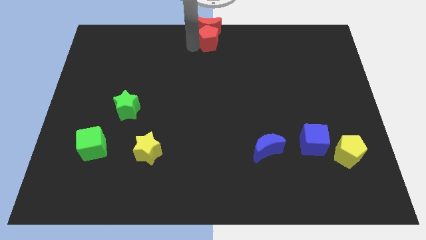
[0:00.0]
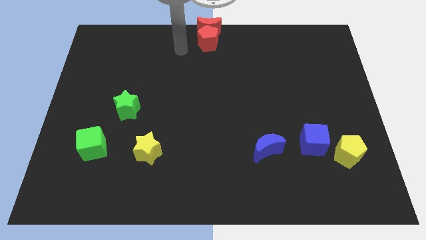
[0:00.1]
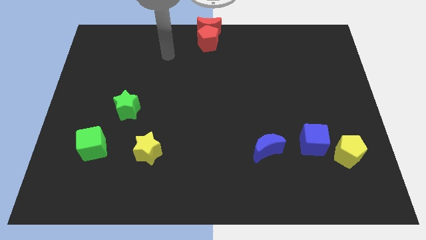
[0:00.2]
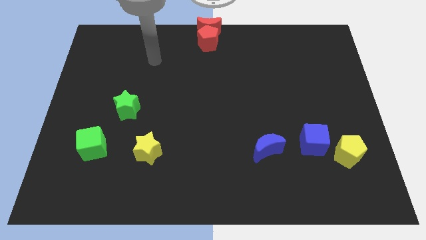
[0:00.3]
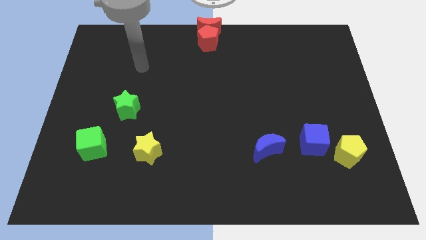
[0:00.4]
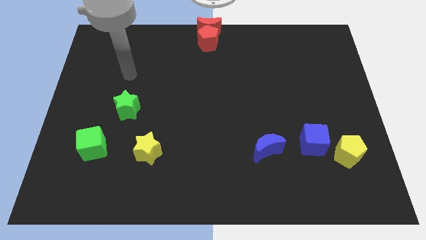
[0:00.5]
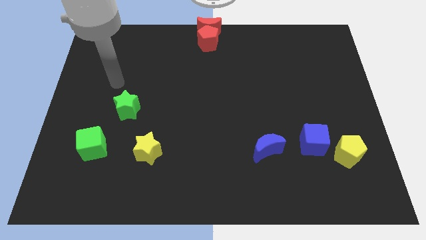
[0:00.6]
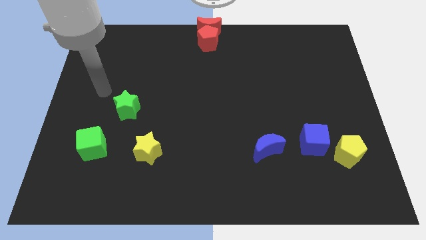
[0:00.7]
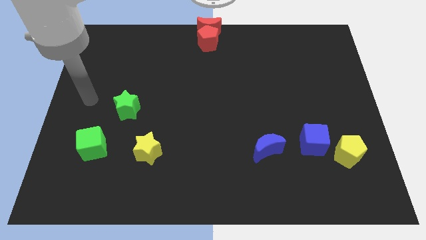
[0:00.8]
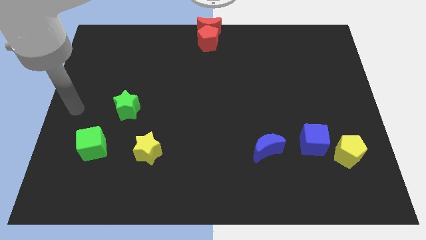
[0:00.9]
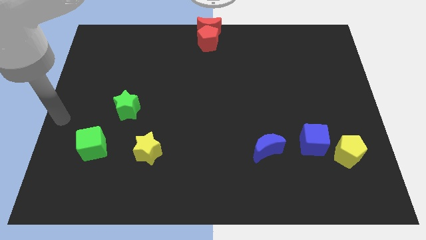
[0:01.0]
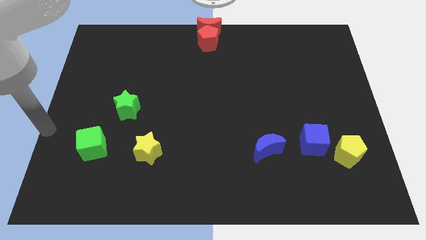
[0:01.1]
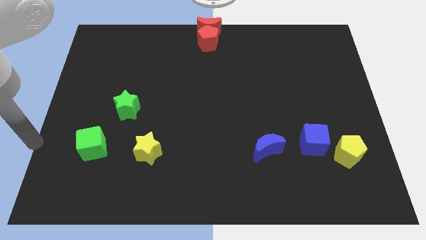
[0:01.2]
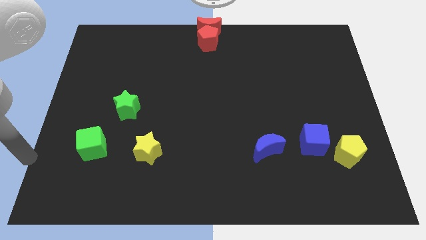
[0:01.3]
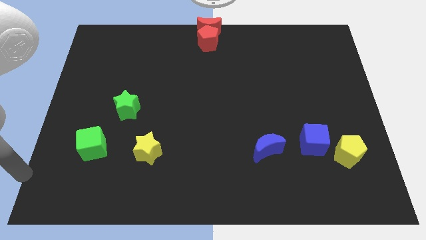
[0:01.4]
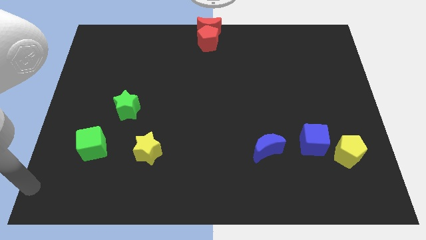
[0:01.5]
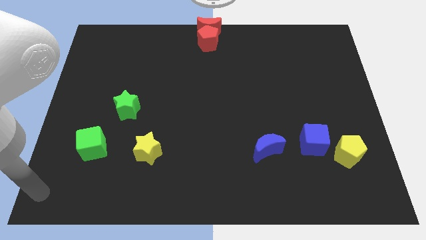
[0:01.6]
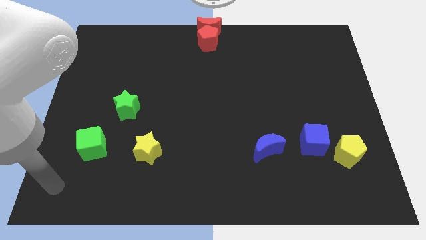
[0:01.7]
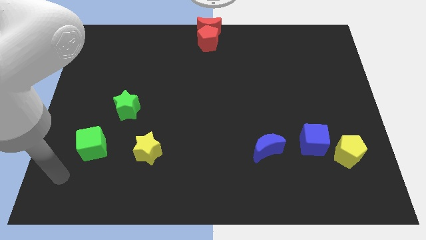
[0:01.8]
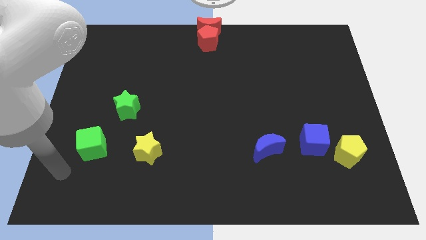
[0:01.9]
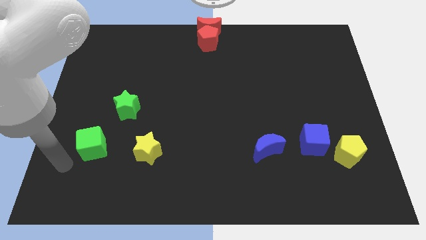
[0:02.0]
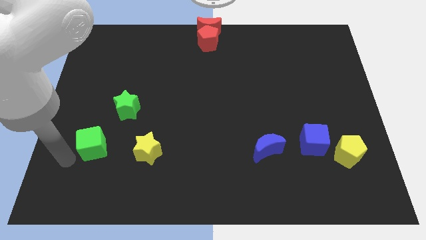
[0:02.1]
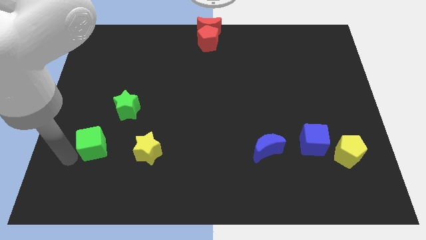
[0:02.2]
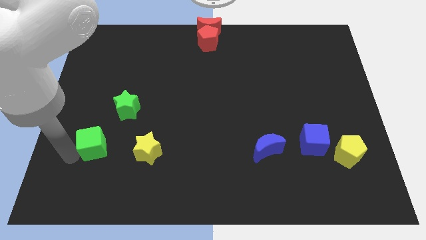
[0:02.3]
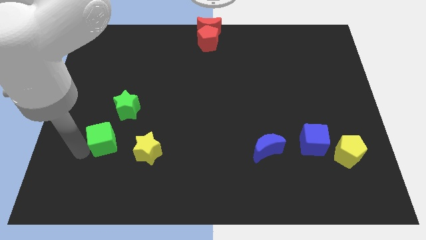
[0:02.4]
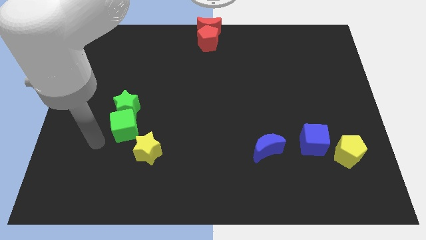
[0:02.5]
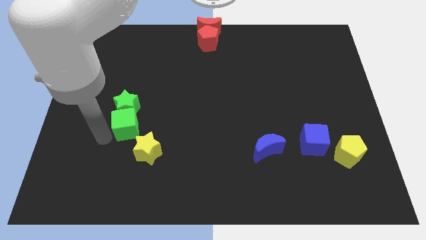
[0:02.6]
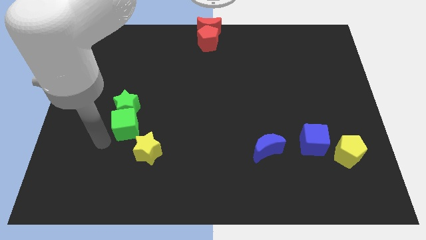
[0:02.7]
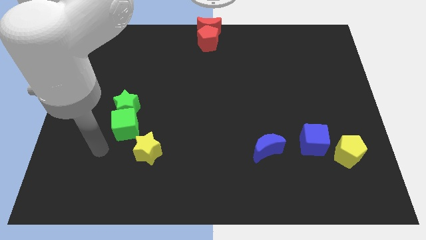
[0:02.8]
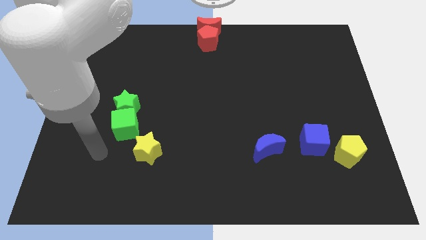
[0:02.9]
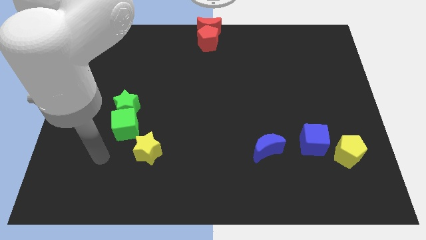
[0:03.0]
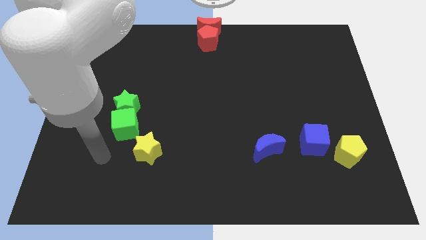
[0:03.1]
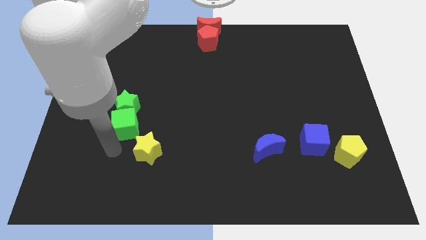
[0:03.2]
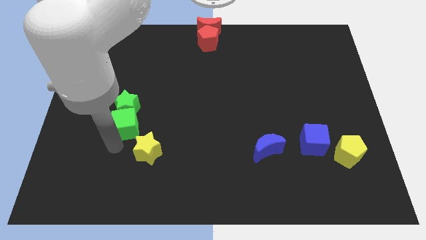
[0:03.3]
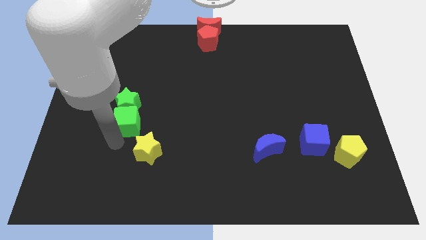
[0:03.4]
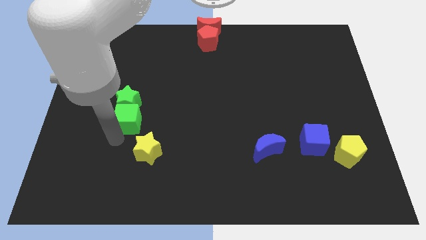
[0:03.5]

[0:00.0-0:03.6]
slide the green cube into the bottom side of the green star

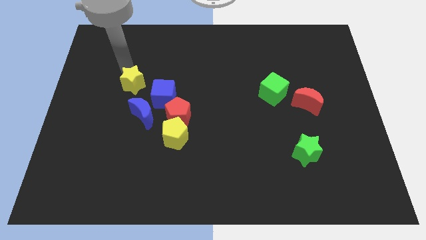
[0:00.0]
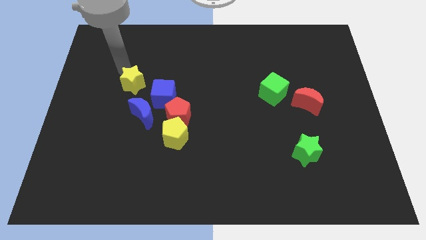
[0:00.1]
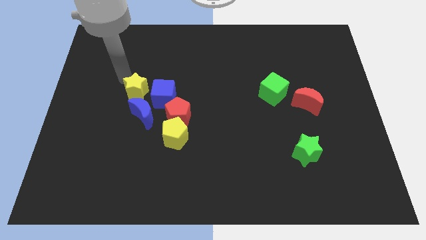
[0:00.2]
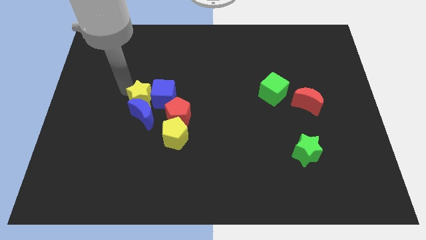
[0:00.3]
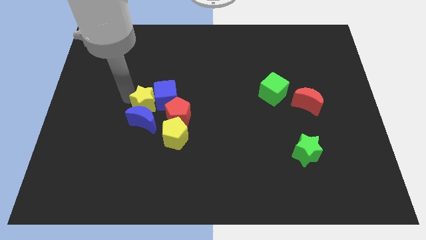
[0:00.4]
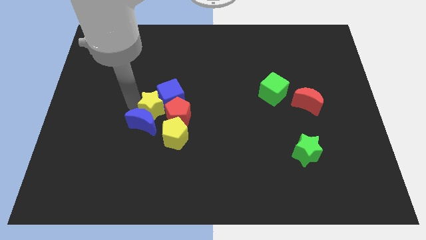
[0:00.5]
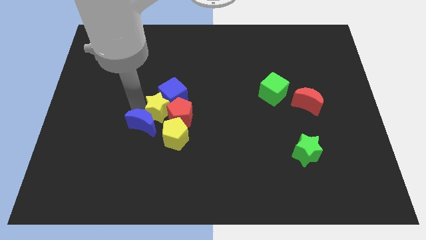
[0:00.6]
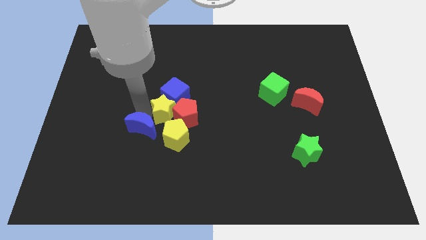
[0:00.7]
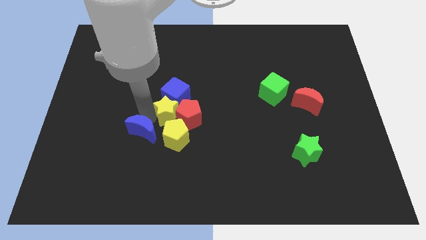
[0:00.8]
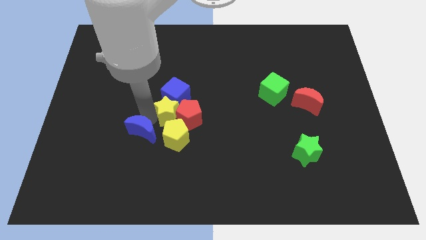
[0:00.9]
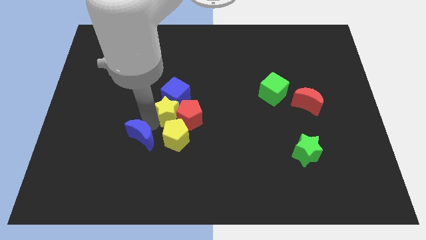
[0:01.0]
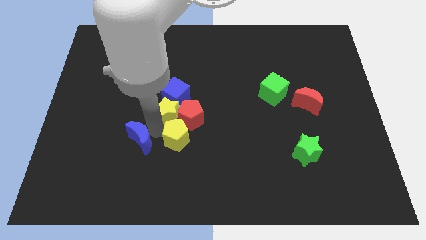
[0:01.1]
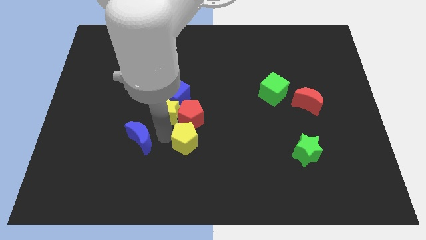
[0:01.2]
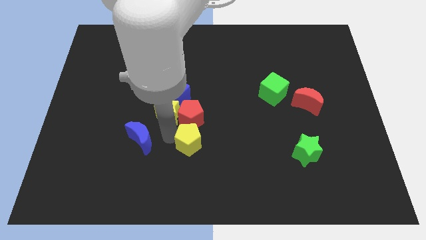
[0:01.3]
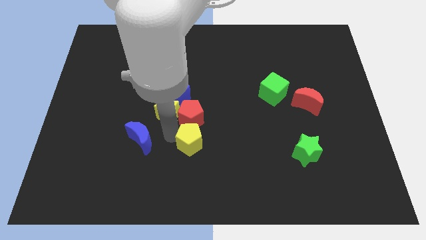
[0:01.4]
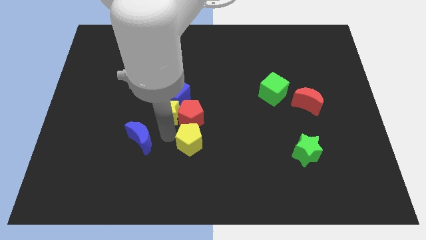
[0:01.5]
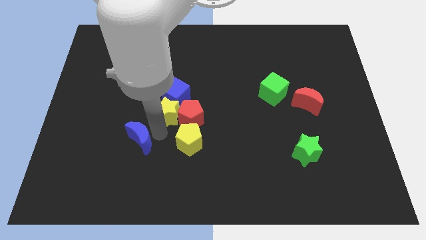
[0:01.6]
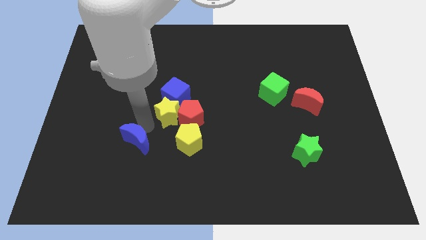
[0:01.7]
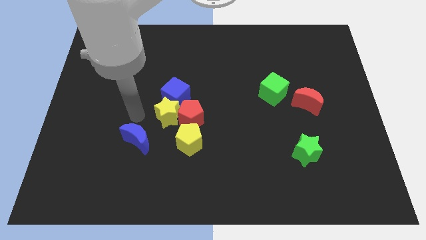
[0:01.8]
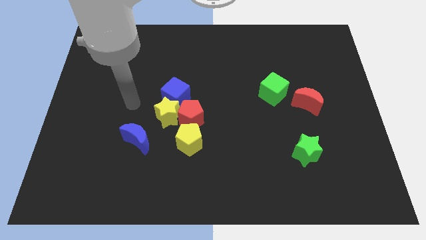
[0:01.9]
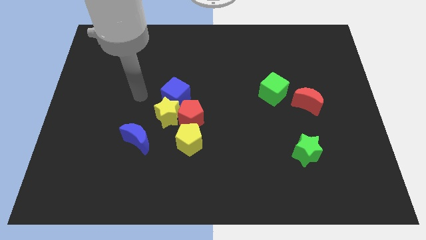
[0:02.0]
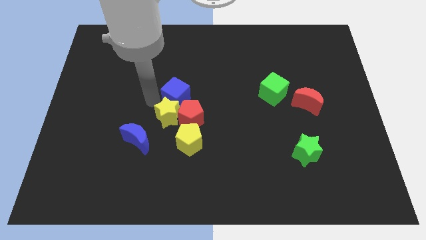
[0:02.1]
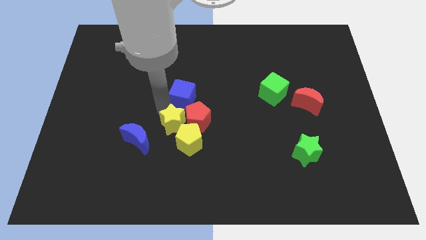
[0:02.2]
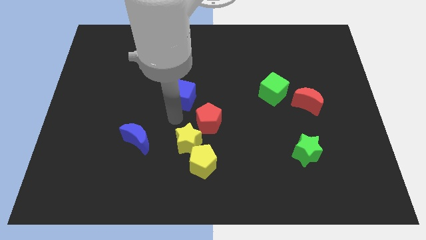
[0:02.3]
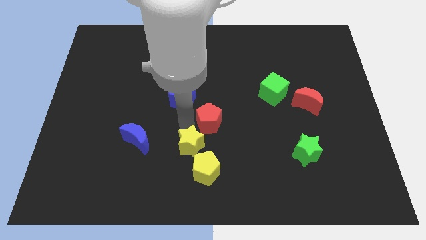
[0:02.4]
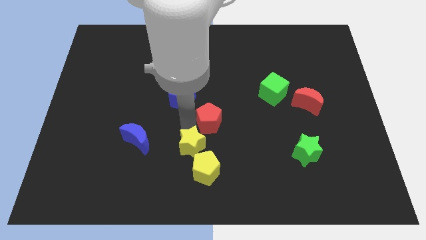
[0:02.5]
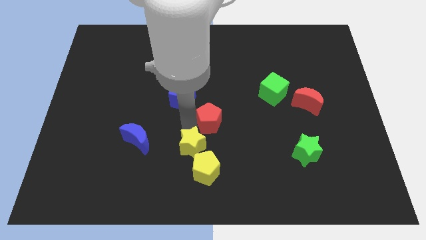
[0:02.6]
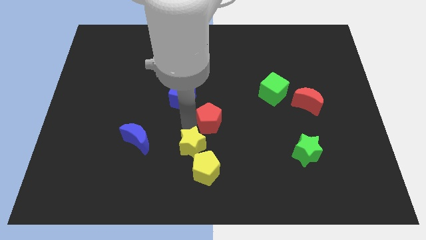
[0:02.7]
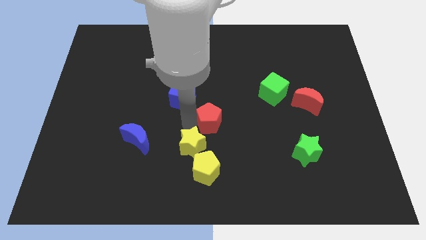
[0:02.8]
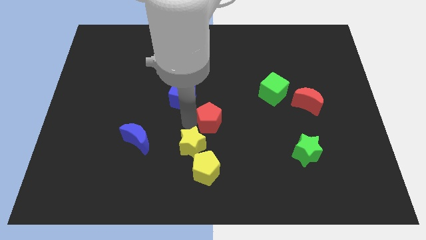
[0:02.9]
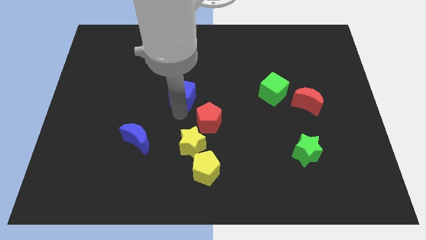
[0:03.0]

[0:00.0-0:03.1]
push the yellow star into the yellow pentagon

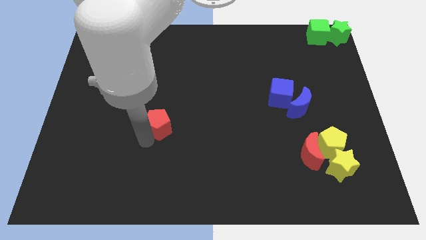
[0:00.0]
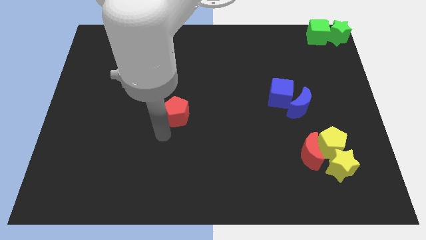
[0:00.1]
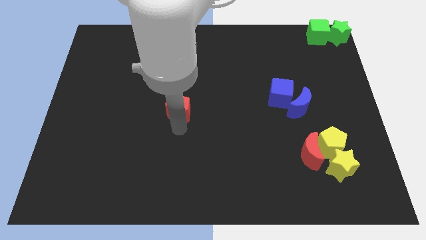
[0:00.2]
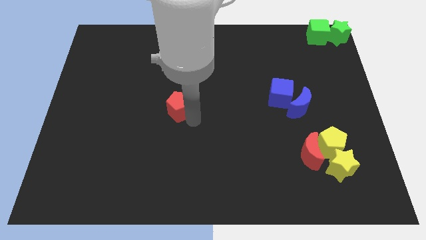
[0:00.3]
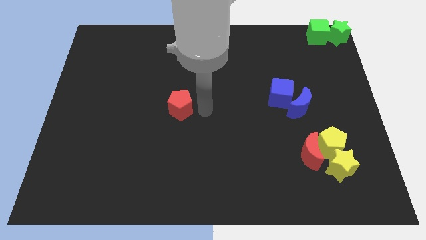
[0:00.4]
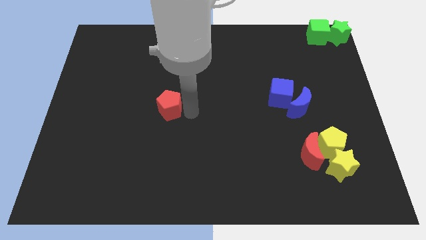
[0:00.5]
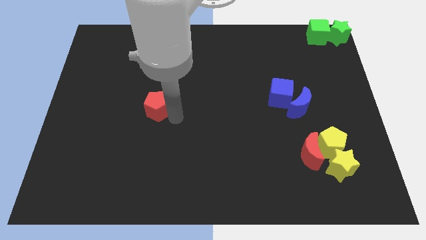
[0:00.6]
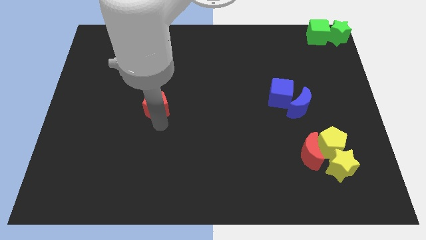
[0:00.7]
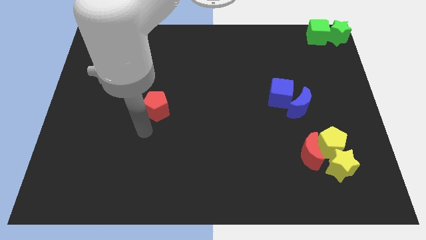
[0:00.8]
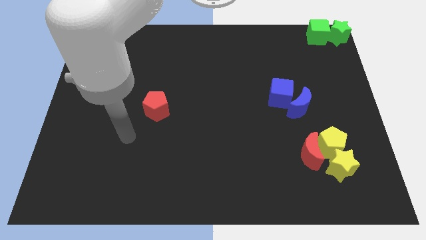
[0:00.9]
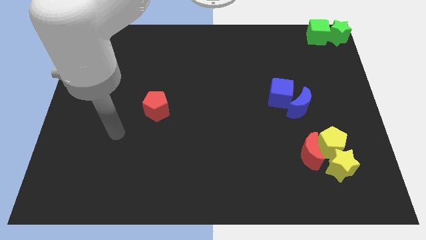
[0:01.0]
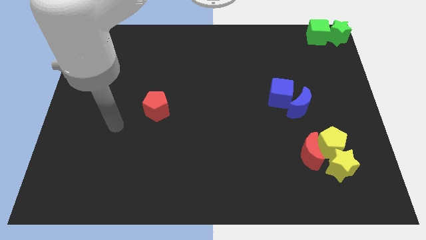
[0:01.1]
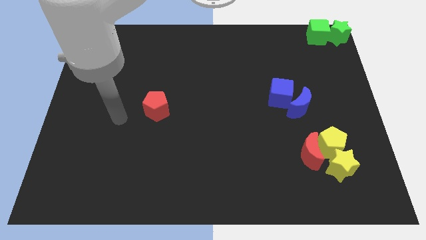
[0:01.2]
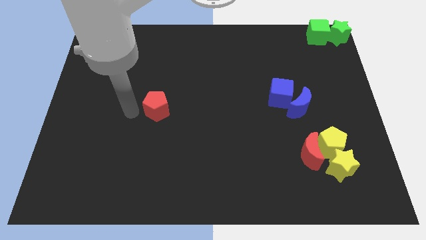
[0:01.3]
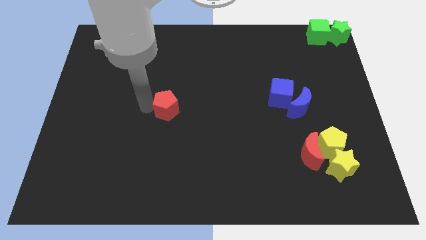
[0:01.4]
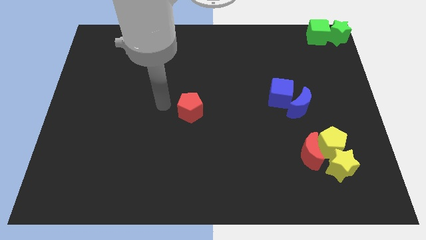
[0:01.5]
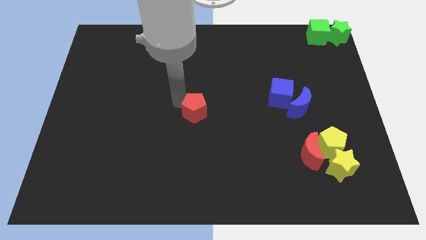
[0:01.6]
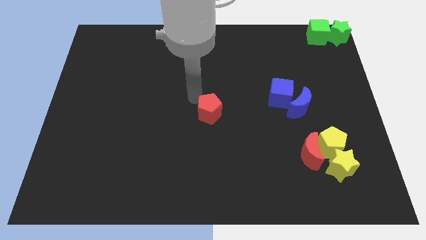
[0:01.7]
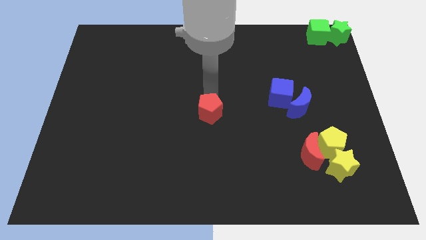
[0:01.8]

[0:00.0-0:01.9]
move the red pentagon to the right

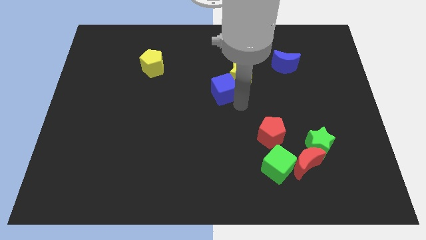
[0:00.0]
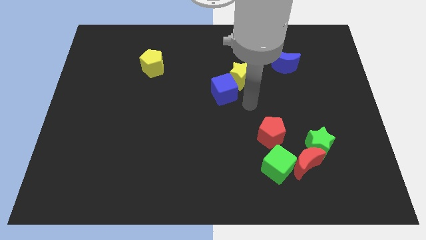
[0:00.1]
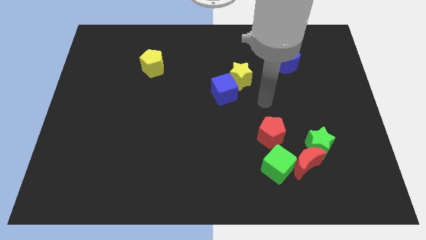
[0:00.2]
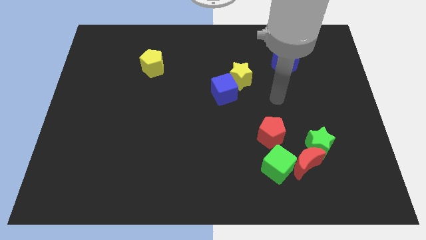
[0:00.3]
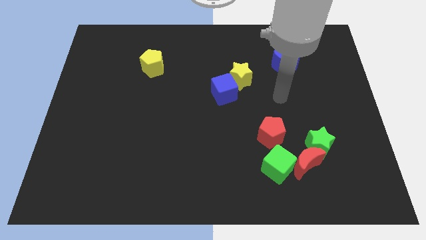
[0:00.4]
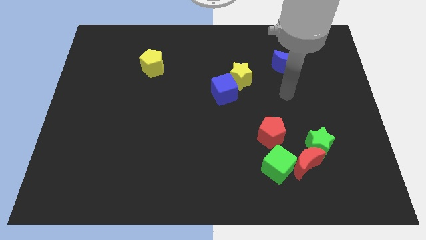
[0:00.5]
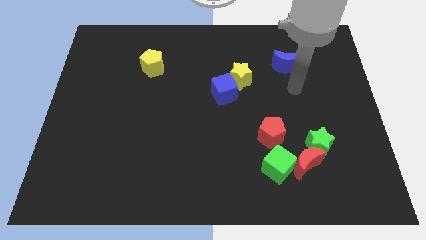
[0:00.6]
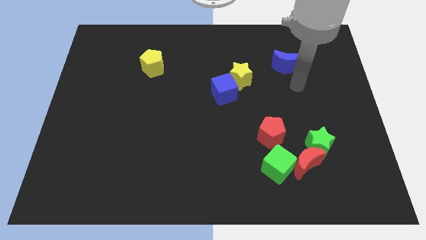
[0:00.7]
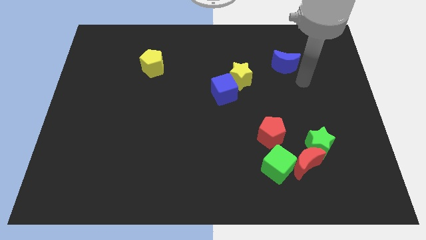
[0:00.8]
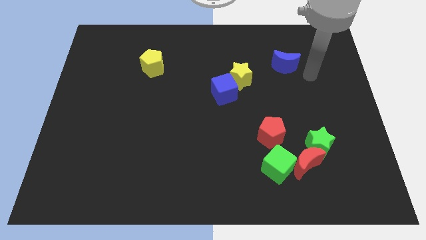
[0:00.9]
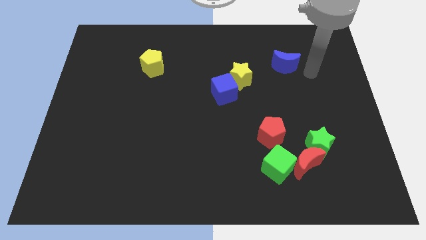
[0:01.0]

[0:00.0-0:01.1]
move your arm towards the blue moon
